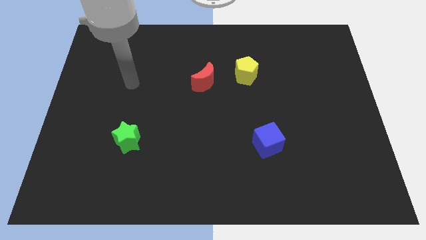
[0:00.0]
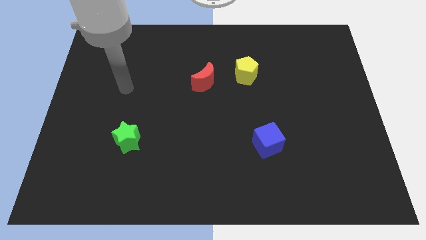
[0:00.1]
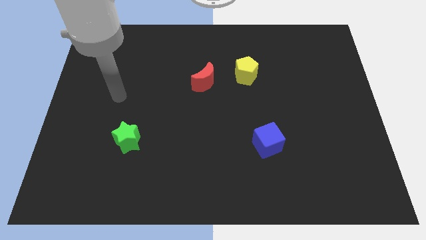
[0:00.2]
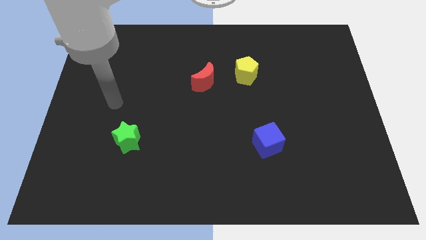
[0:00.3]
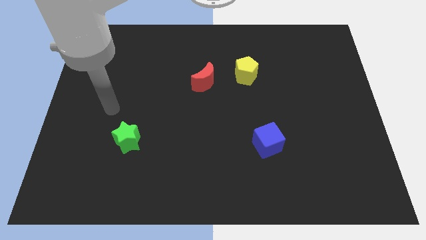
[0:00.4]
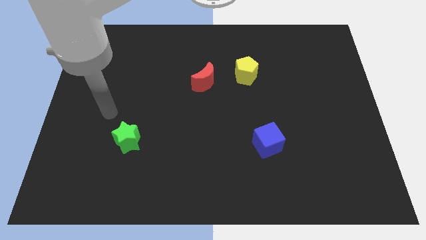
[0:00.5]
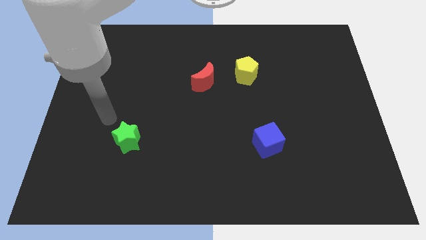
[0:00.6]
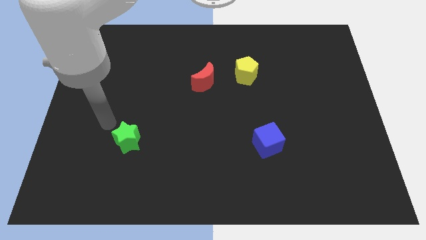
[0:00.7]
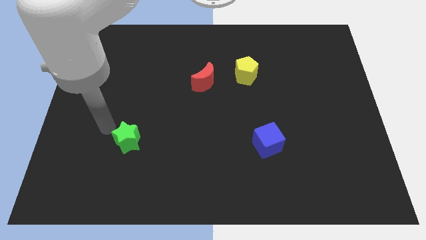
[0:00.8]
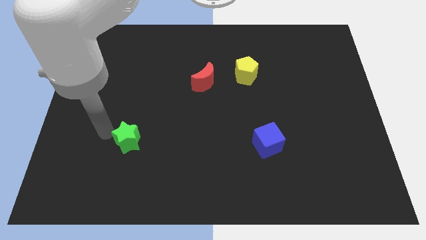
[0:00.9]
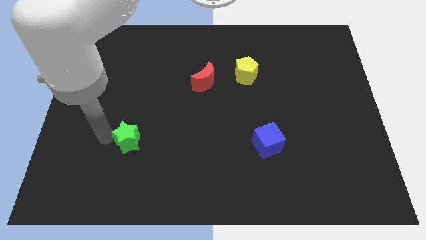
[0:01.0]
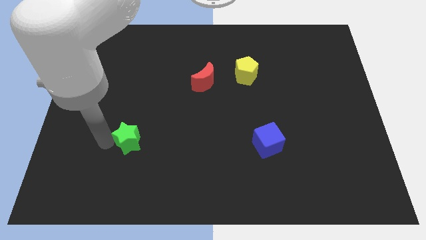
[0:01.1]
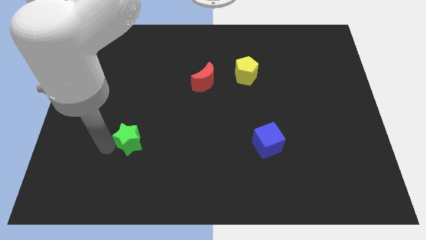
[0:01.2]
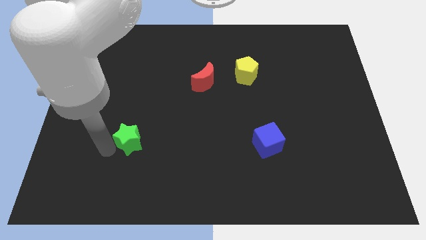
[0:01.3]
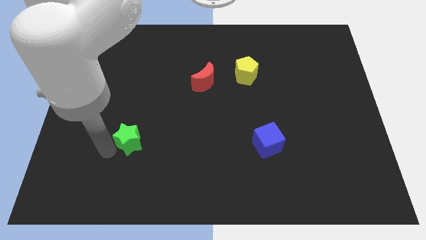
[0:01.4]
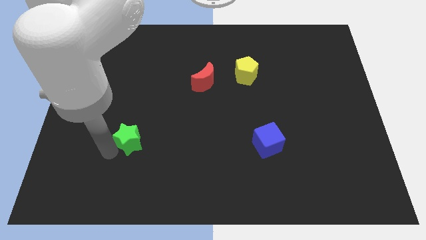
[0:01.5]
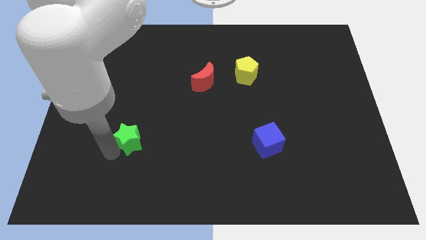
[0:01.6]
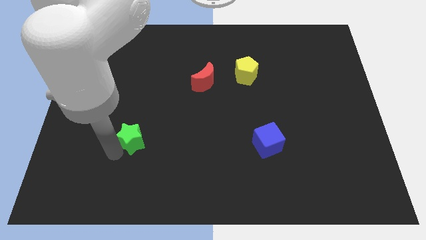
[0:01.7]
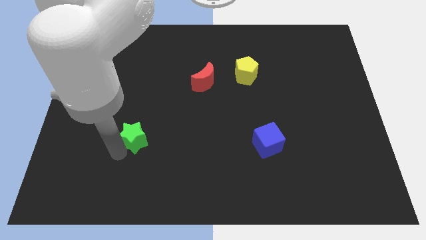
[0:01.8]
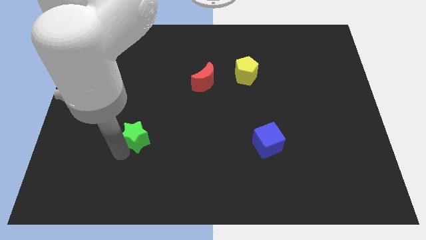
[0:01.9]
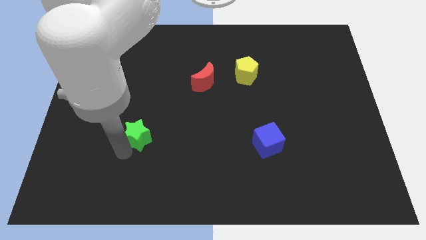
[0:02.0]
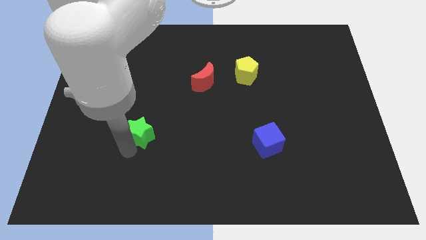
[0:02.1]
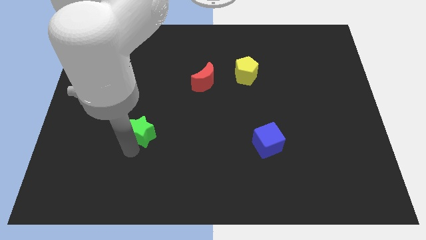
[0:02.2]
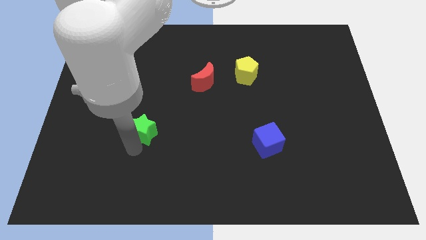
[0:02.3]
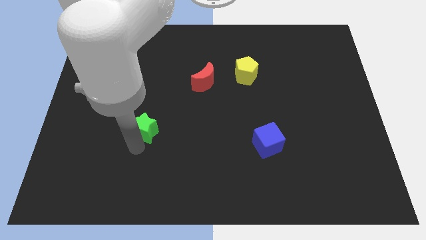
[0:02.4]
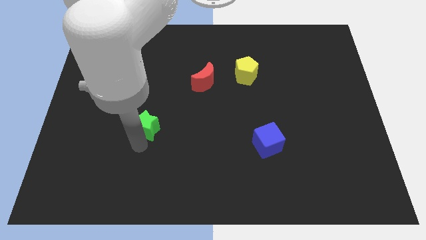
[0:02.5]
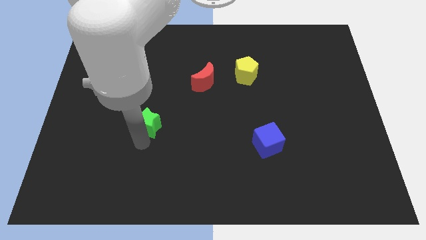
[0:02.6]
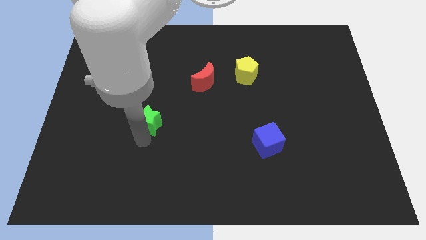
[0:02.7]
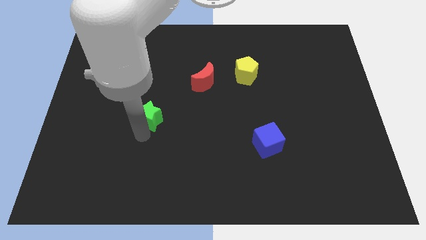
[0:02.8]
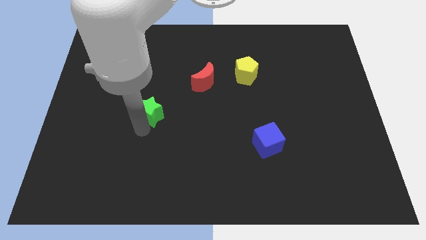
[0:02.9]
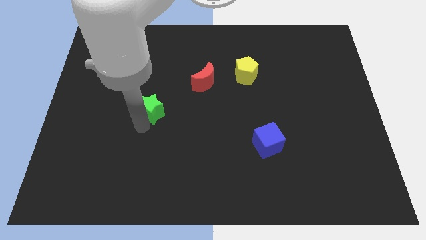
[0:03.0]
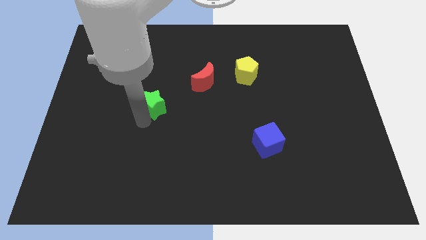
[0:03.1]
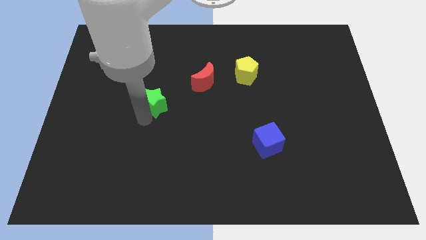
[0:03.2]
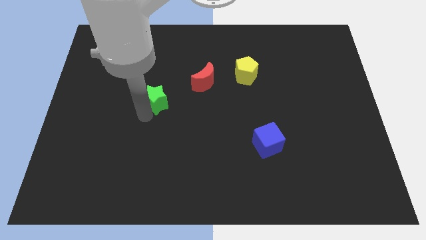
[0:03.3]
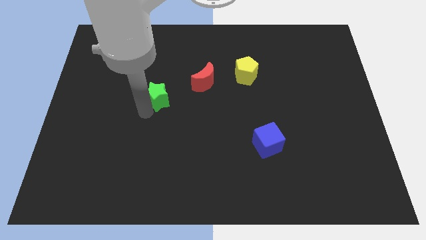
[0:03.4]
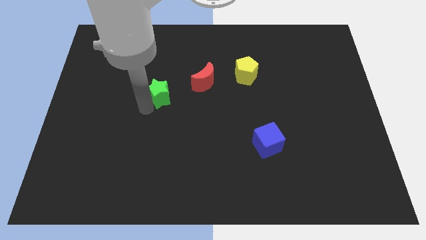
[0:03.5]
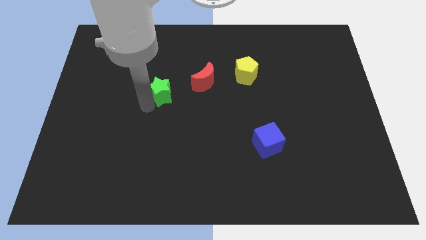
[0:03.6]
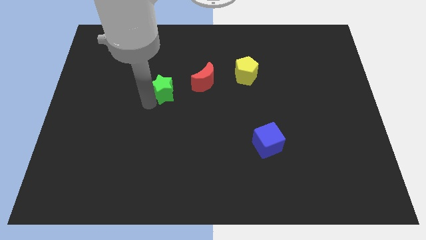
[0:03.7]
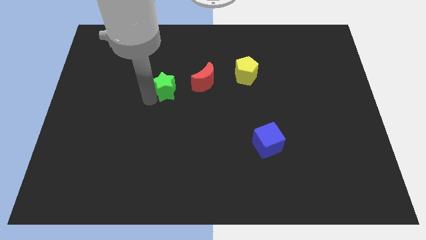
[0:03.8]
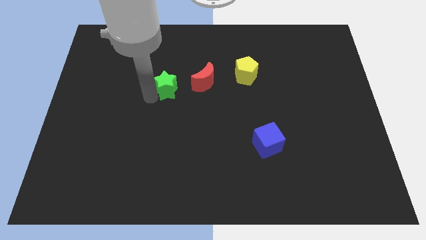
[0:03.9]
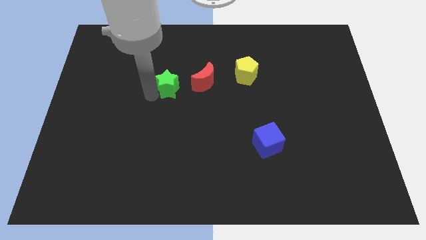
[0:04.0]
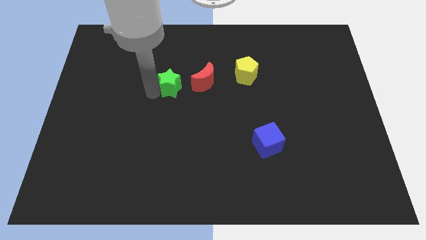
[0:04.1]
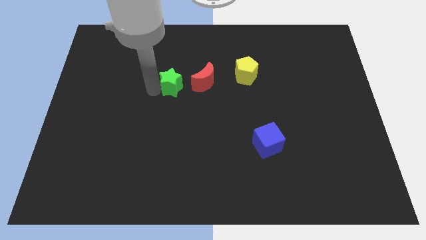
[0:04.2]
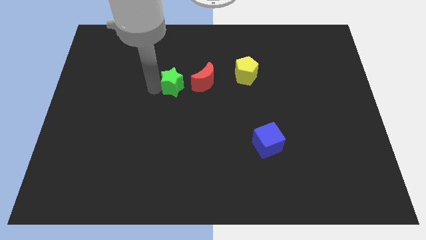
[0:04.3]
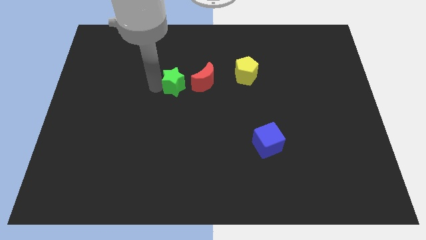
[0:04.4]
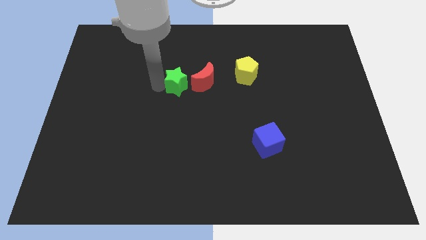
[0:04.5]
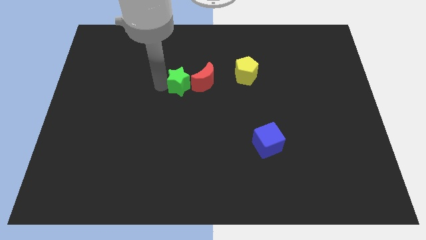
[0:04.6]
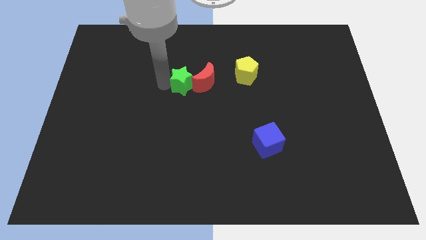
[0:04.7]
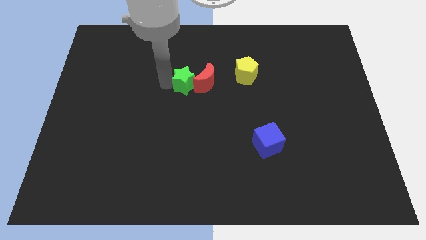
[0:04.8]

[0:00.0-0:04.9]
push the green block close to the moon

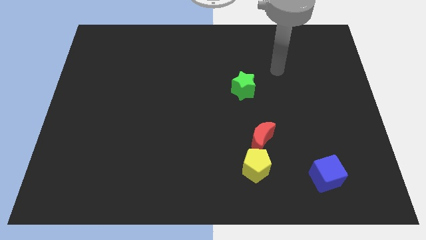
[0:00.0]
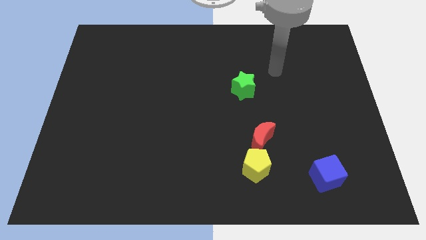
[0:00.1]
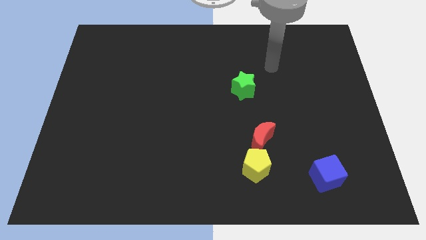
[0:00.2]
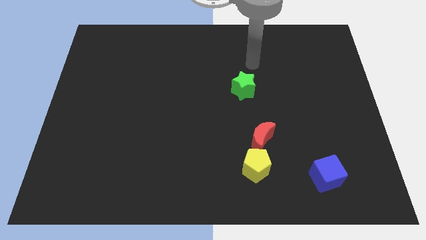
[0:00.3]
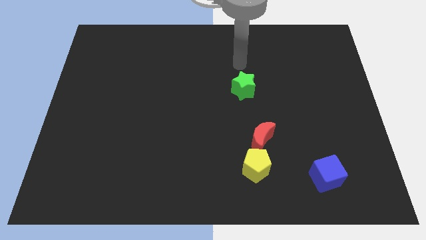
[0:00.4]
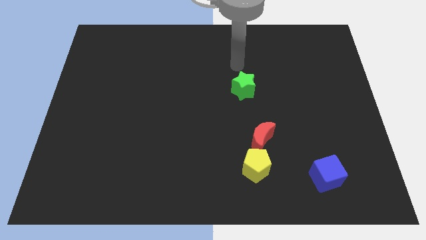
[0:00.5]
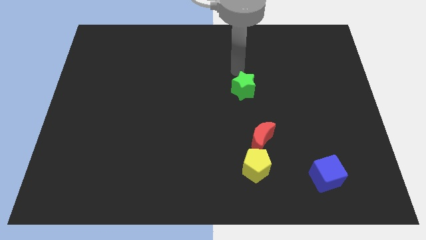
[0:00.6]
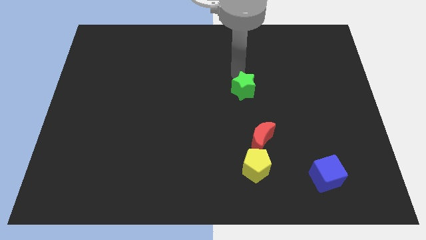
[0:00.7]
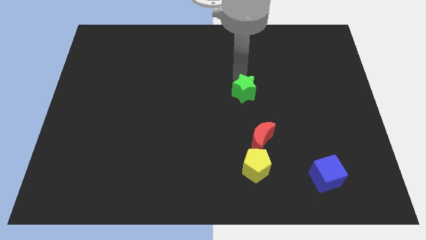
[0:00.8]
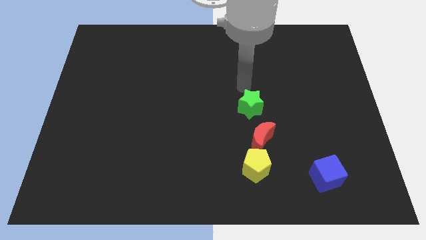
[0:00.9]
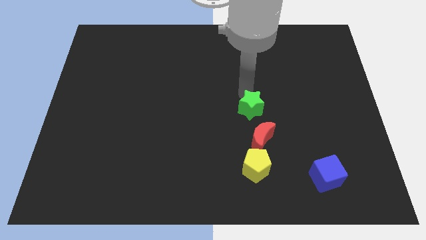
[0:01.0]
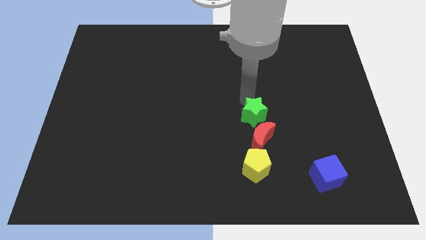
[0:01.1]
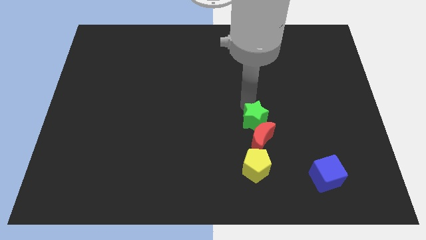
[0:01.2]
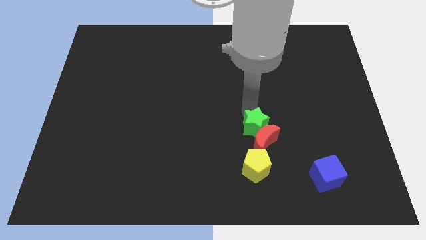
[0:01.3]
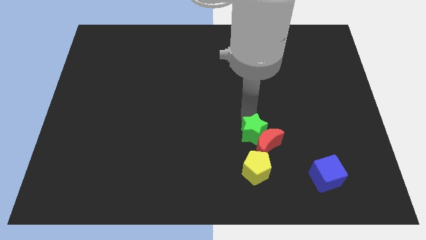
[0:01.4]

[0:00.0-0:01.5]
move the star towards the red moon

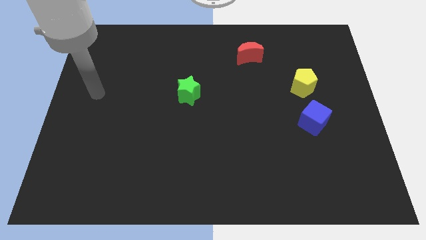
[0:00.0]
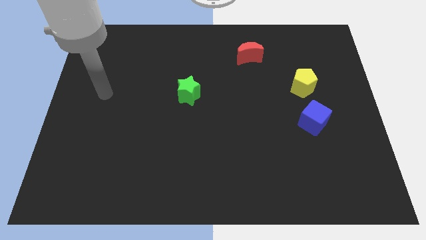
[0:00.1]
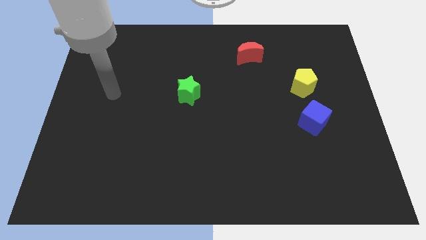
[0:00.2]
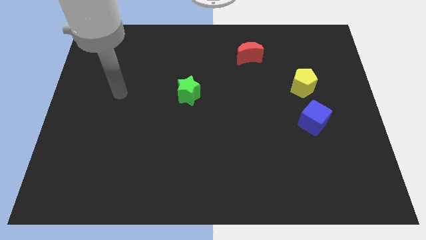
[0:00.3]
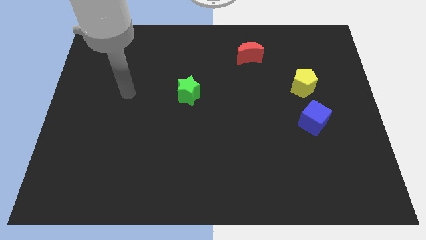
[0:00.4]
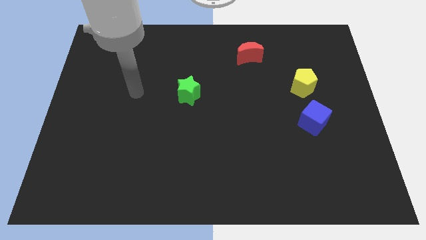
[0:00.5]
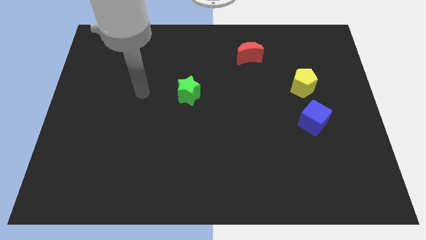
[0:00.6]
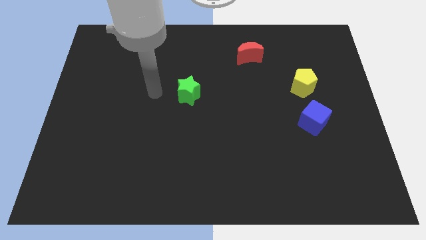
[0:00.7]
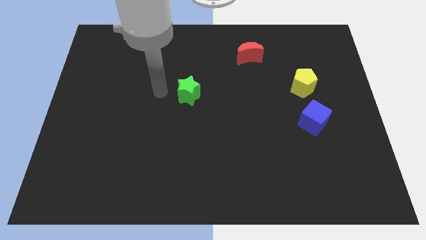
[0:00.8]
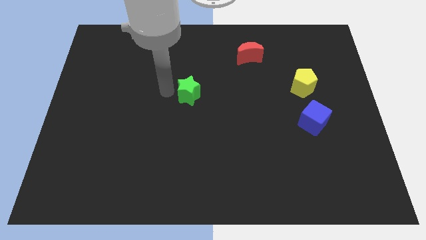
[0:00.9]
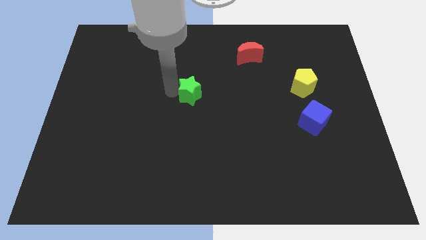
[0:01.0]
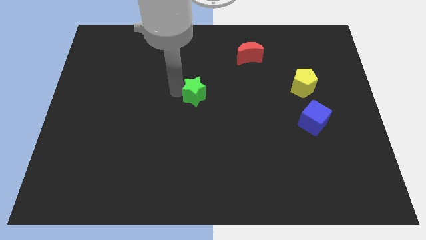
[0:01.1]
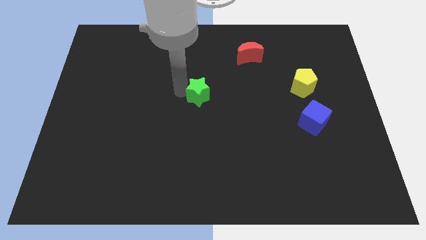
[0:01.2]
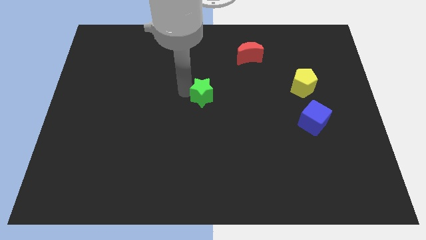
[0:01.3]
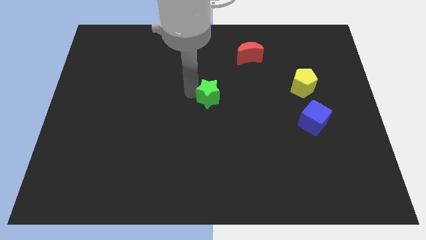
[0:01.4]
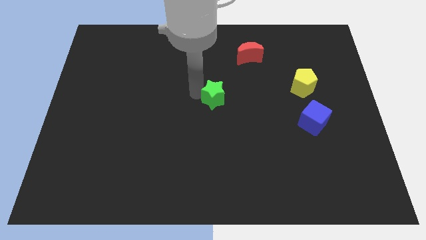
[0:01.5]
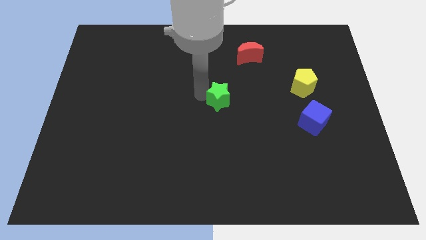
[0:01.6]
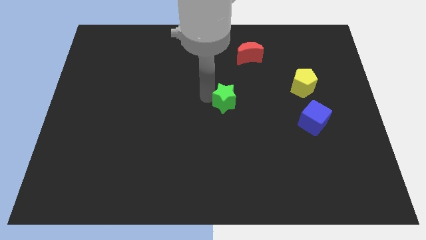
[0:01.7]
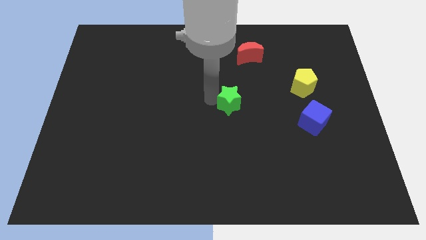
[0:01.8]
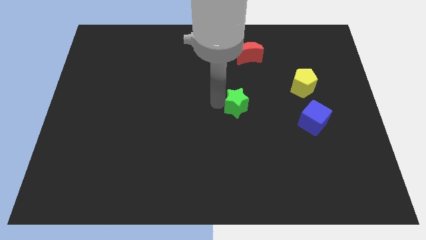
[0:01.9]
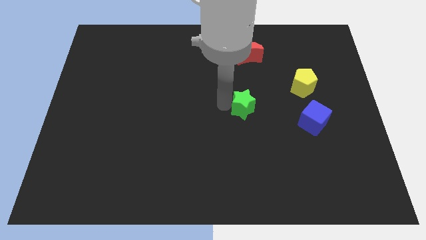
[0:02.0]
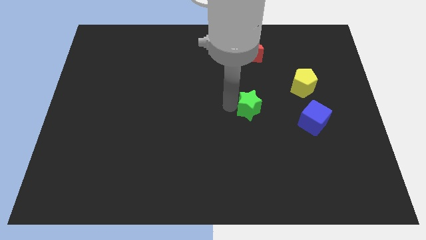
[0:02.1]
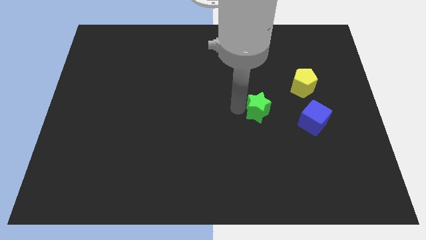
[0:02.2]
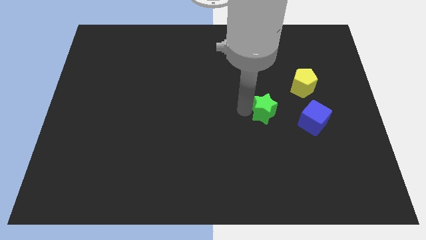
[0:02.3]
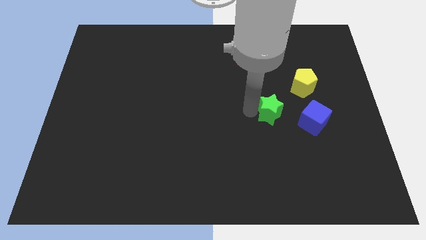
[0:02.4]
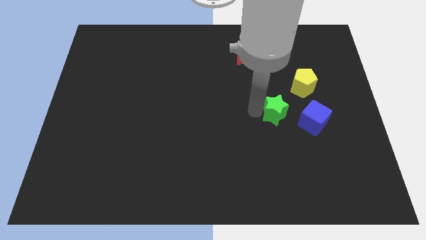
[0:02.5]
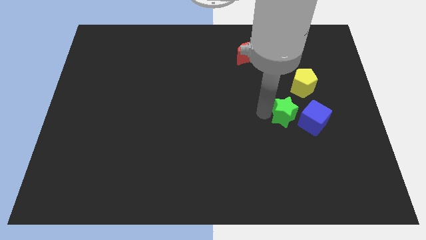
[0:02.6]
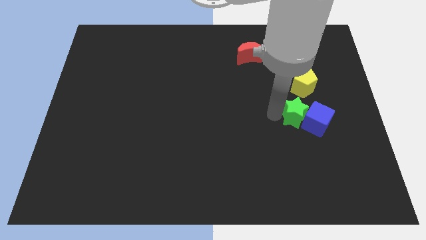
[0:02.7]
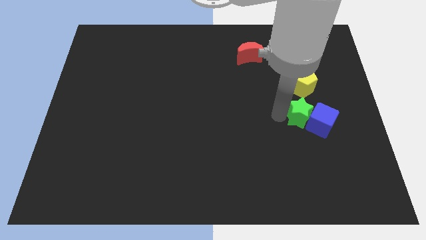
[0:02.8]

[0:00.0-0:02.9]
slide the green block towards the blue block
